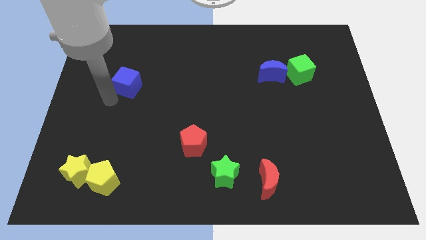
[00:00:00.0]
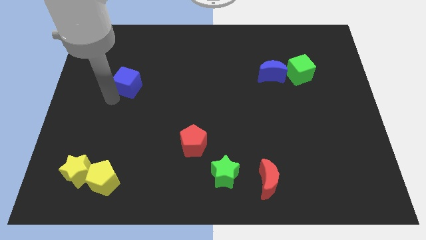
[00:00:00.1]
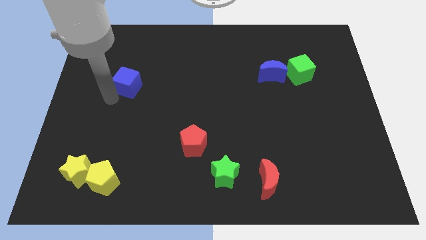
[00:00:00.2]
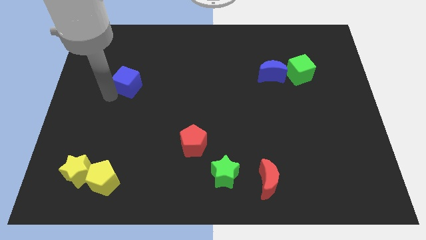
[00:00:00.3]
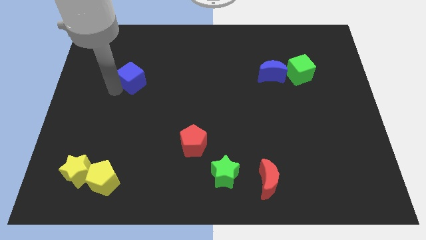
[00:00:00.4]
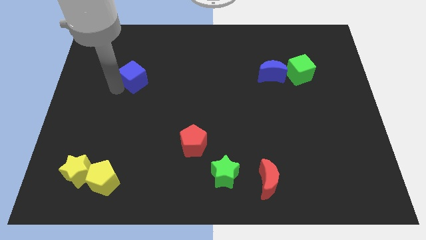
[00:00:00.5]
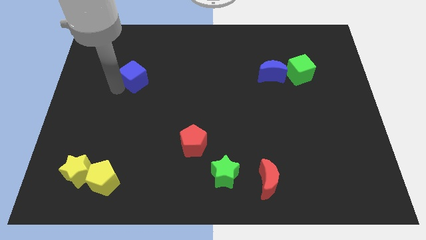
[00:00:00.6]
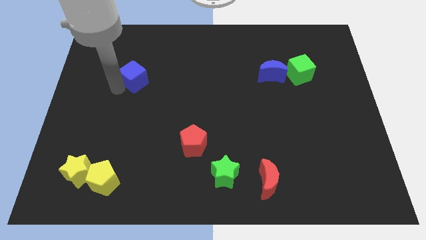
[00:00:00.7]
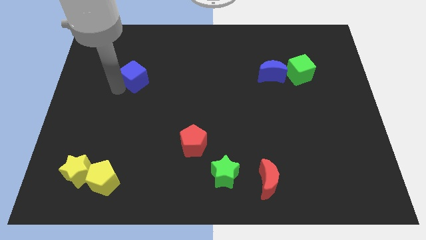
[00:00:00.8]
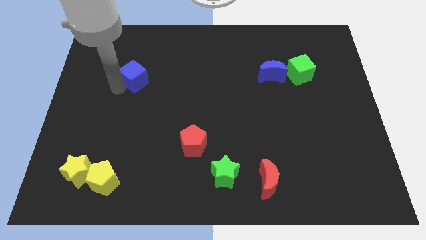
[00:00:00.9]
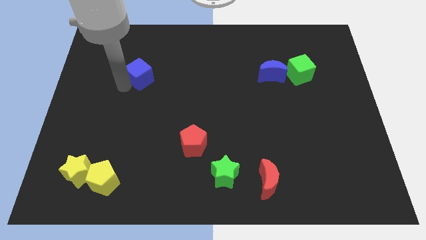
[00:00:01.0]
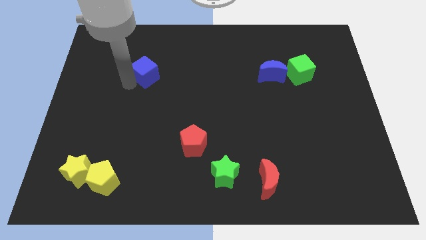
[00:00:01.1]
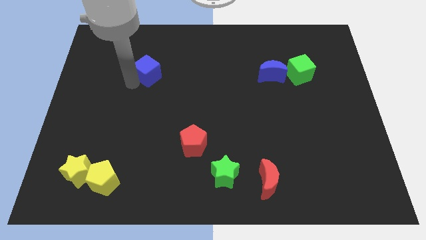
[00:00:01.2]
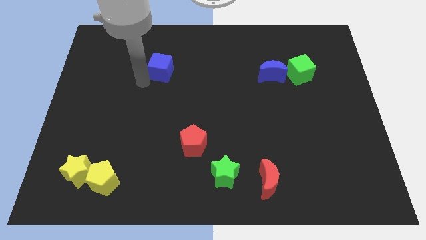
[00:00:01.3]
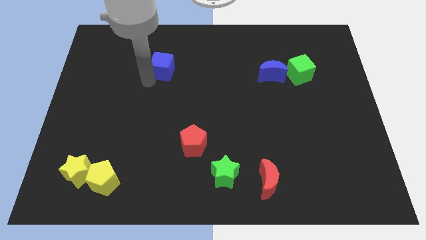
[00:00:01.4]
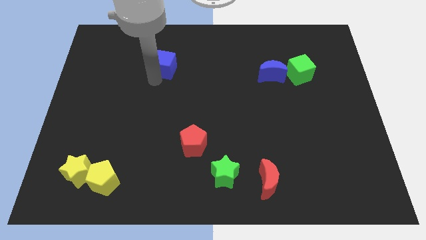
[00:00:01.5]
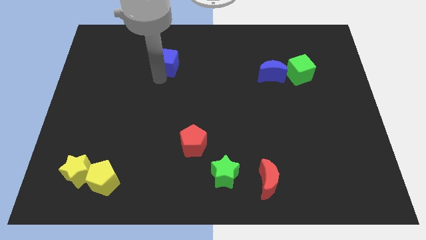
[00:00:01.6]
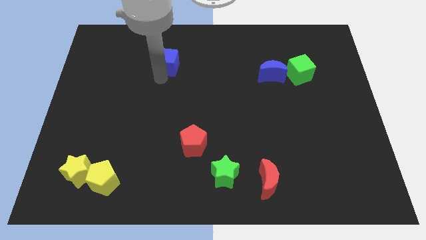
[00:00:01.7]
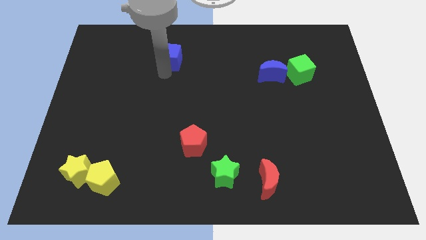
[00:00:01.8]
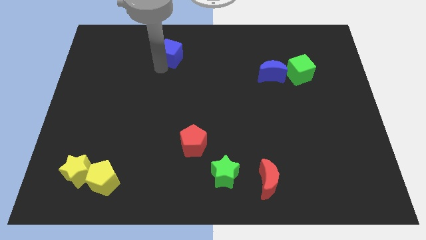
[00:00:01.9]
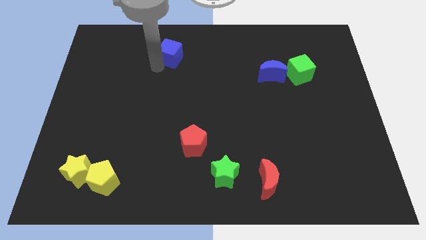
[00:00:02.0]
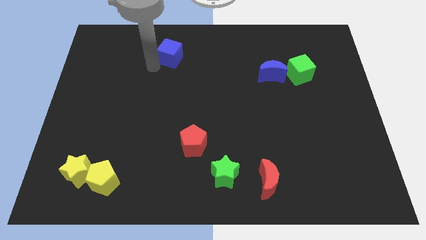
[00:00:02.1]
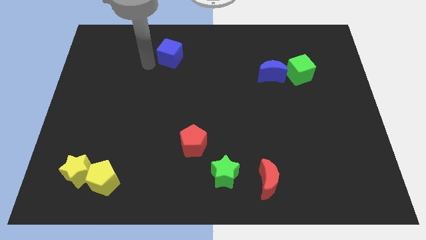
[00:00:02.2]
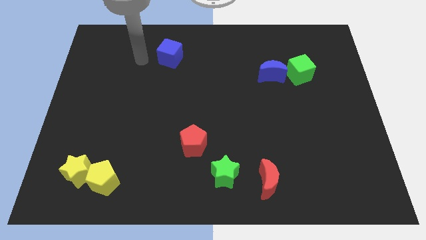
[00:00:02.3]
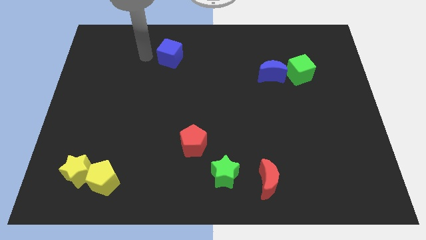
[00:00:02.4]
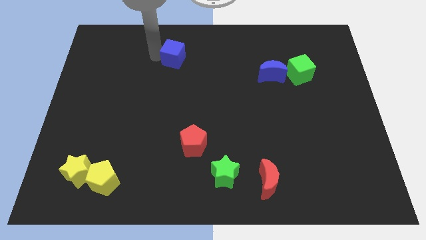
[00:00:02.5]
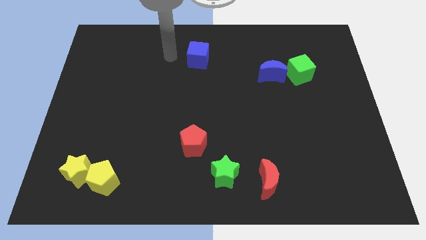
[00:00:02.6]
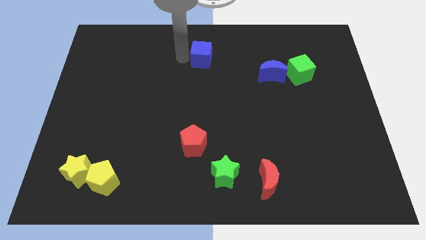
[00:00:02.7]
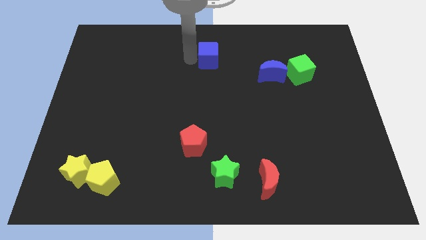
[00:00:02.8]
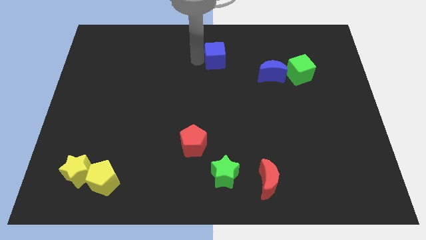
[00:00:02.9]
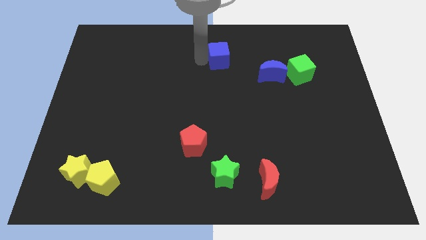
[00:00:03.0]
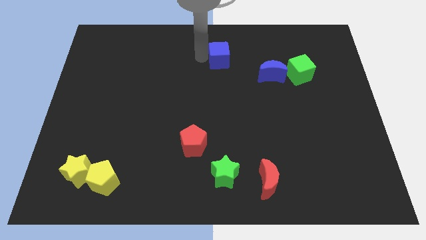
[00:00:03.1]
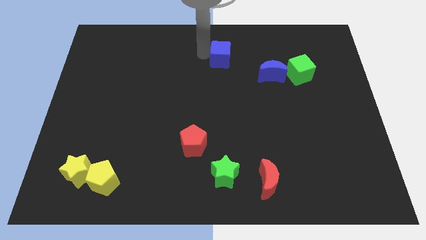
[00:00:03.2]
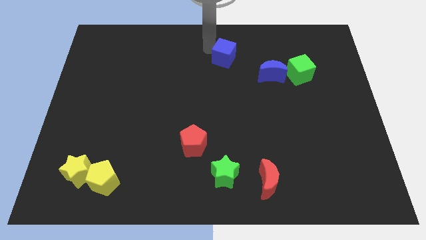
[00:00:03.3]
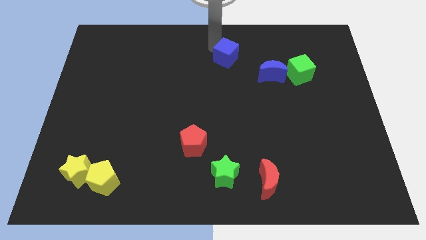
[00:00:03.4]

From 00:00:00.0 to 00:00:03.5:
push blue cube above green star

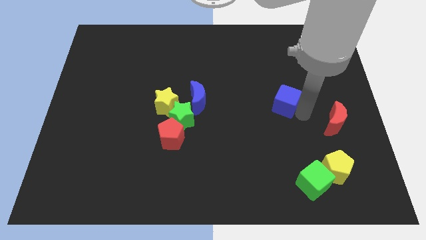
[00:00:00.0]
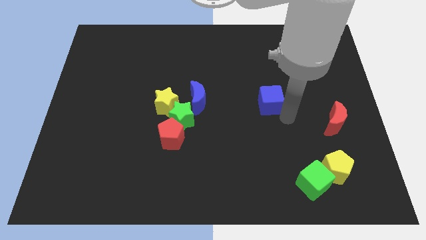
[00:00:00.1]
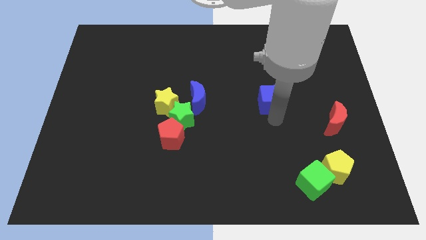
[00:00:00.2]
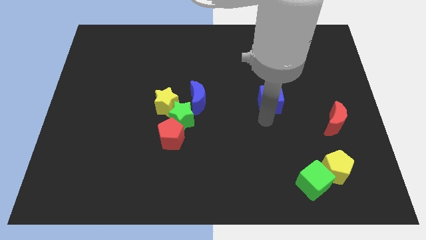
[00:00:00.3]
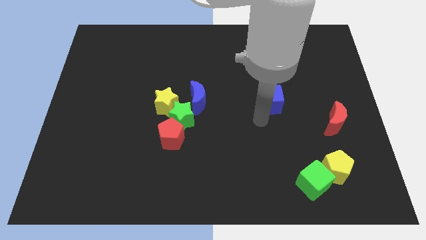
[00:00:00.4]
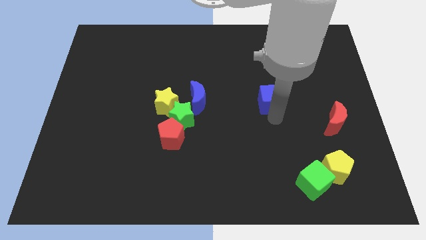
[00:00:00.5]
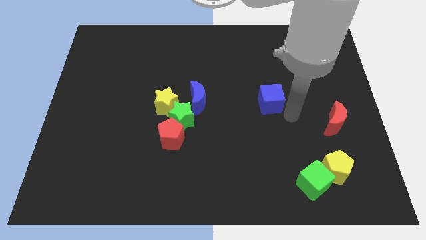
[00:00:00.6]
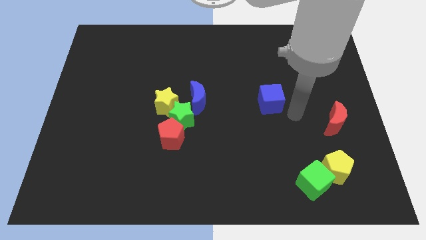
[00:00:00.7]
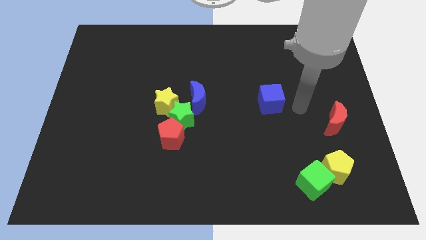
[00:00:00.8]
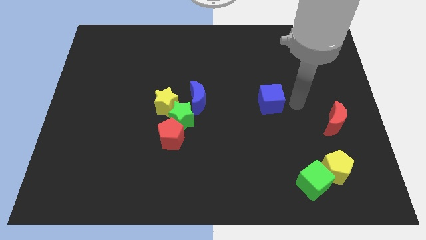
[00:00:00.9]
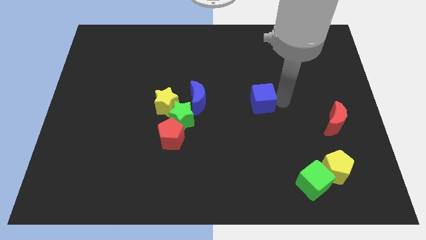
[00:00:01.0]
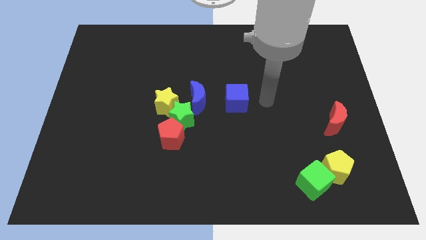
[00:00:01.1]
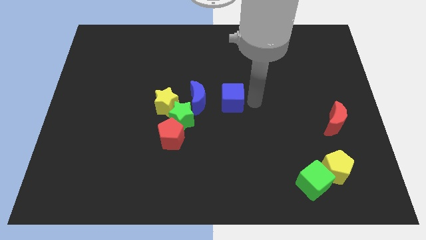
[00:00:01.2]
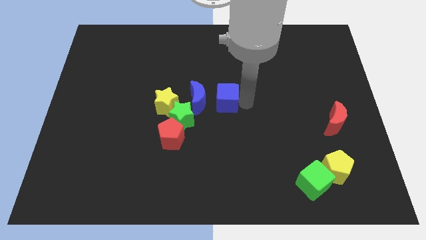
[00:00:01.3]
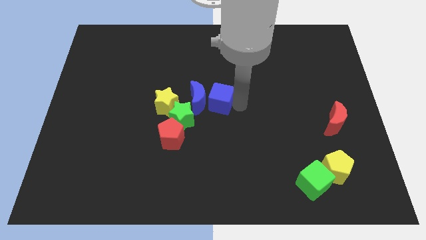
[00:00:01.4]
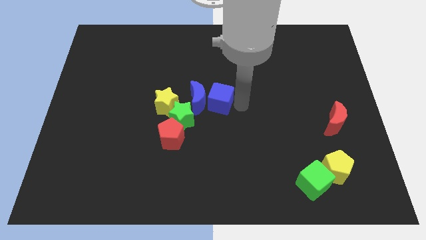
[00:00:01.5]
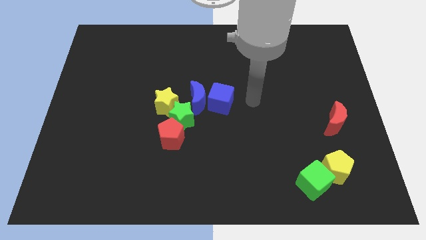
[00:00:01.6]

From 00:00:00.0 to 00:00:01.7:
move blue cube towards blue crescent

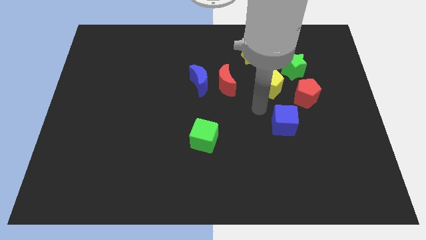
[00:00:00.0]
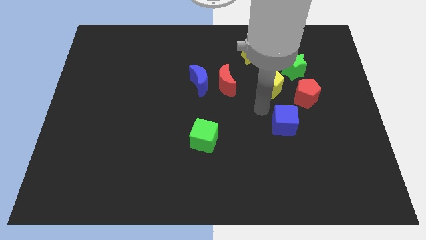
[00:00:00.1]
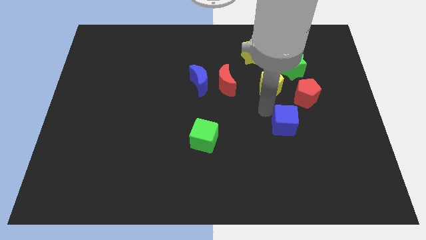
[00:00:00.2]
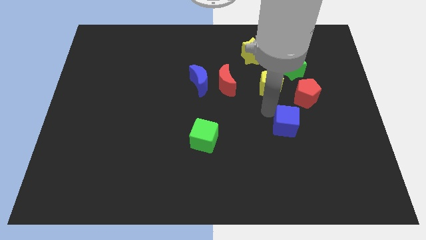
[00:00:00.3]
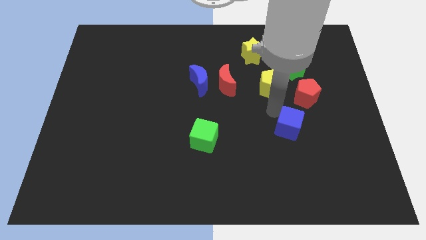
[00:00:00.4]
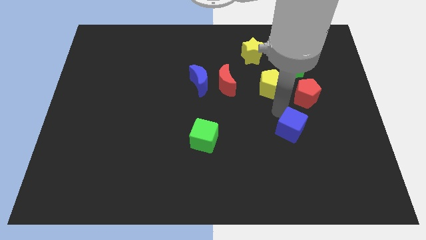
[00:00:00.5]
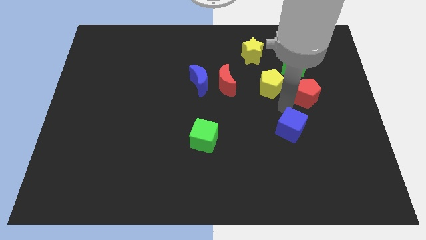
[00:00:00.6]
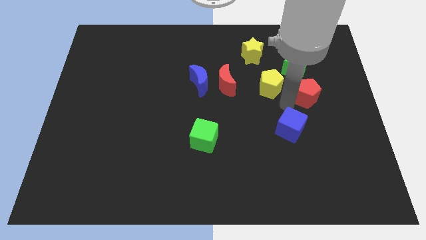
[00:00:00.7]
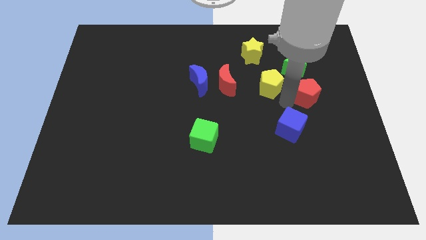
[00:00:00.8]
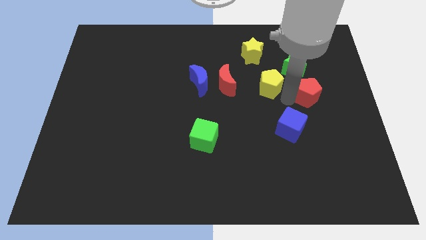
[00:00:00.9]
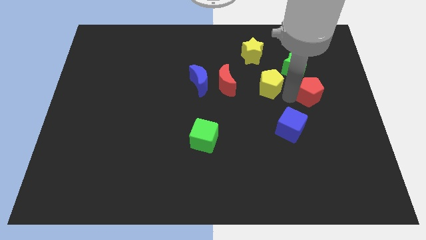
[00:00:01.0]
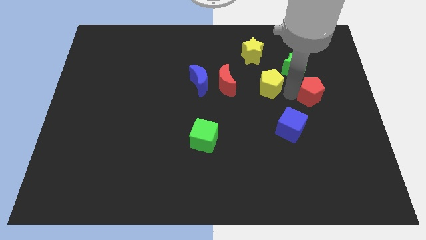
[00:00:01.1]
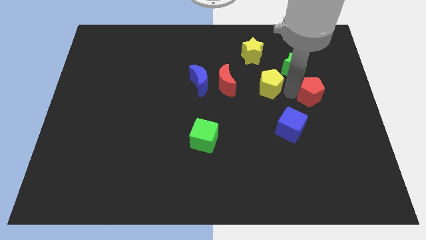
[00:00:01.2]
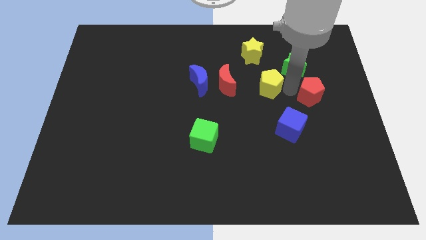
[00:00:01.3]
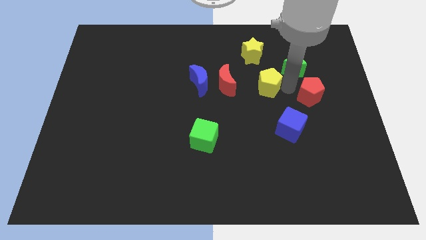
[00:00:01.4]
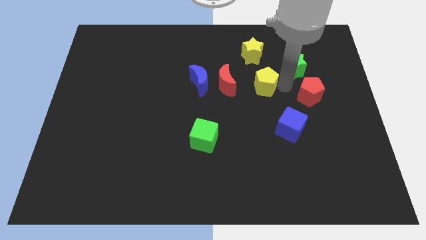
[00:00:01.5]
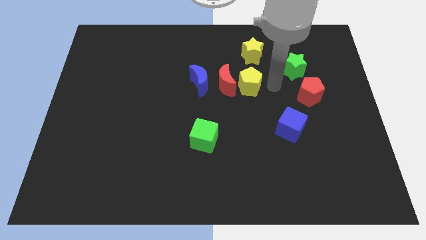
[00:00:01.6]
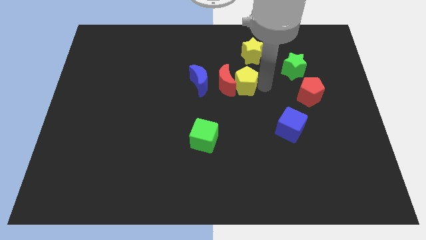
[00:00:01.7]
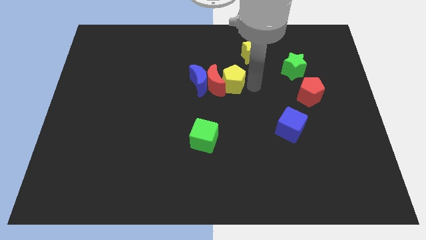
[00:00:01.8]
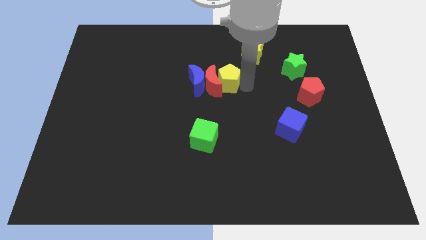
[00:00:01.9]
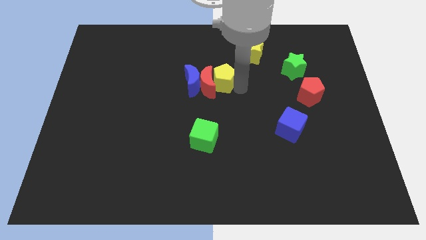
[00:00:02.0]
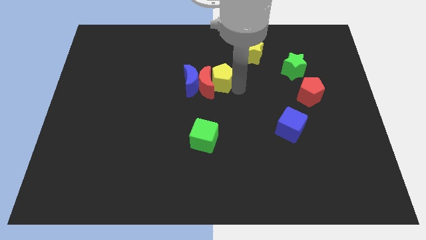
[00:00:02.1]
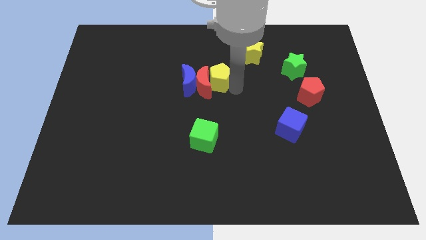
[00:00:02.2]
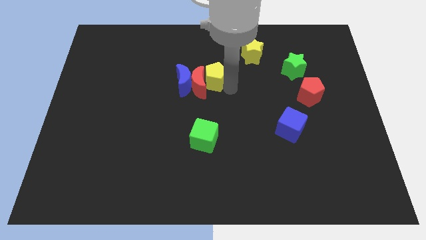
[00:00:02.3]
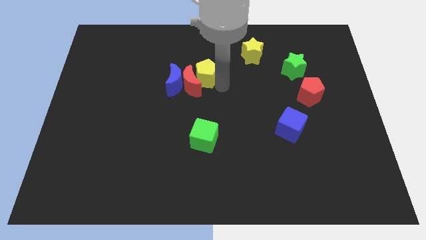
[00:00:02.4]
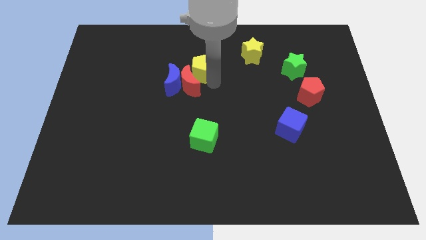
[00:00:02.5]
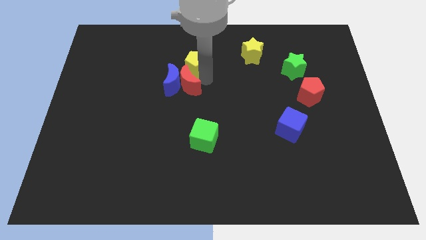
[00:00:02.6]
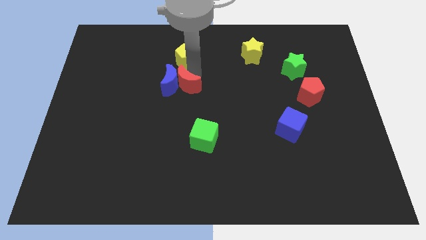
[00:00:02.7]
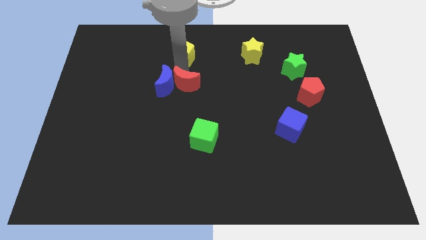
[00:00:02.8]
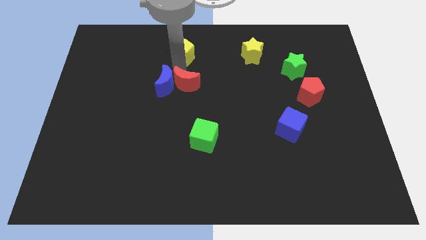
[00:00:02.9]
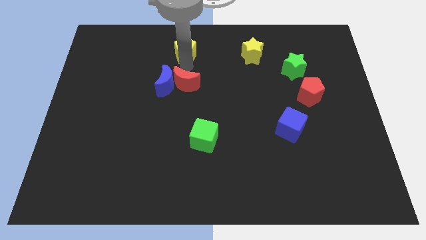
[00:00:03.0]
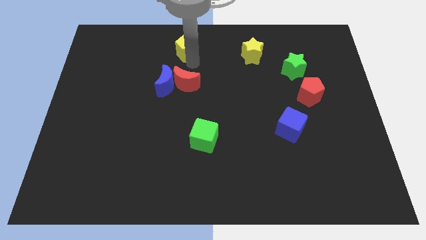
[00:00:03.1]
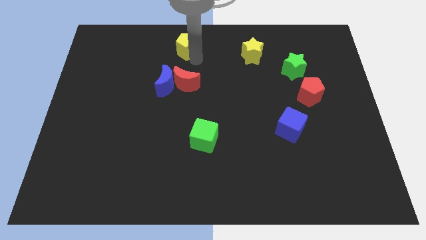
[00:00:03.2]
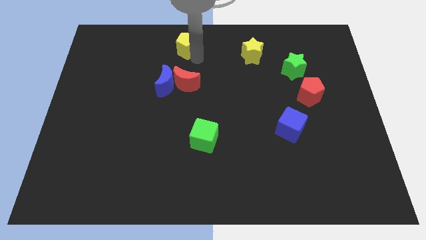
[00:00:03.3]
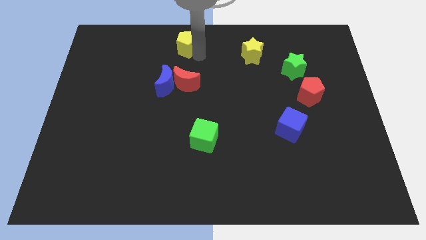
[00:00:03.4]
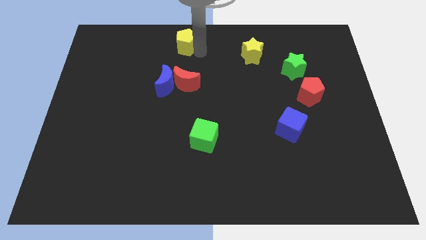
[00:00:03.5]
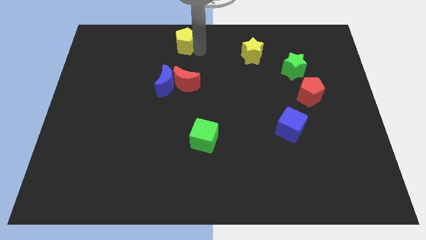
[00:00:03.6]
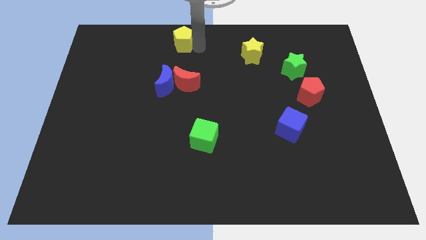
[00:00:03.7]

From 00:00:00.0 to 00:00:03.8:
place the yellow pentagon above the red moon
